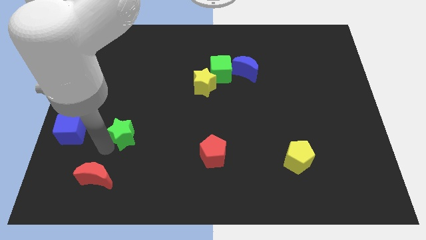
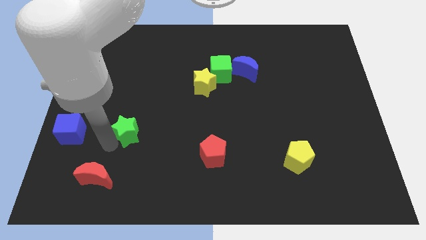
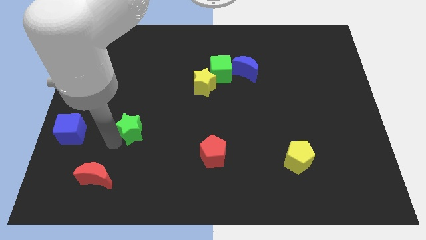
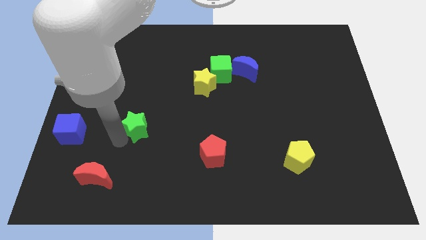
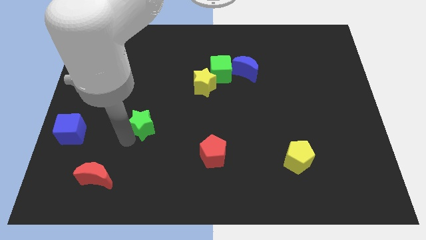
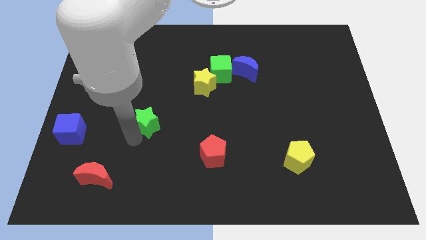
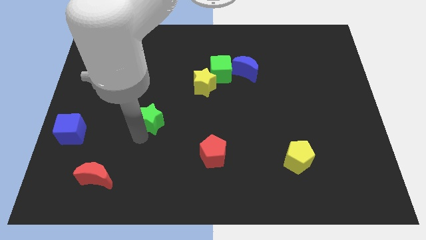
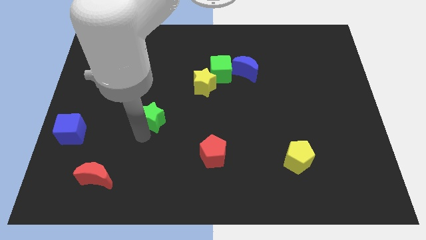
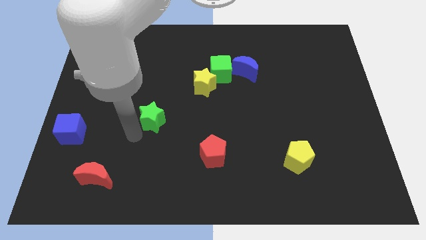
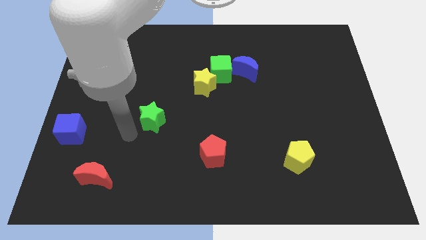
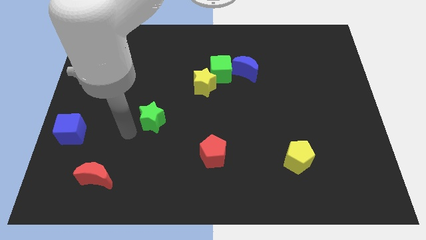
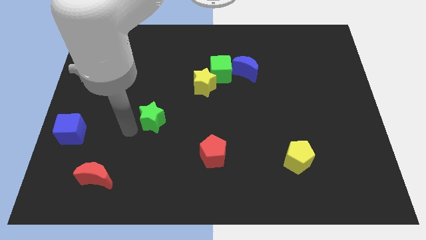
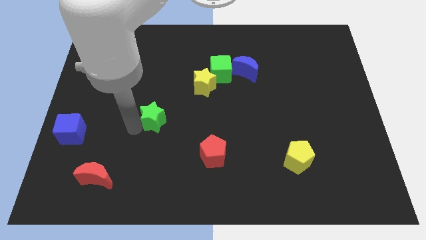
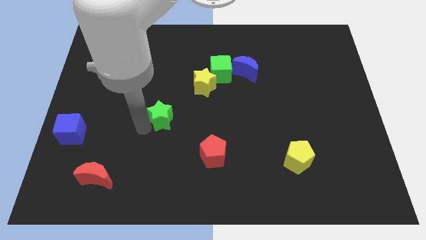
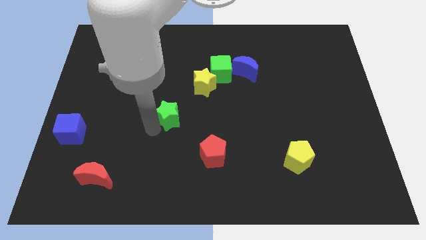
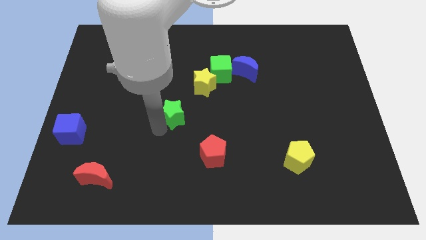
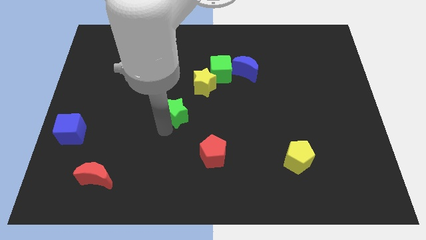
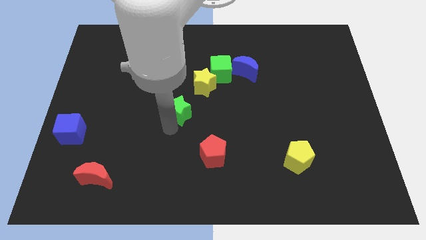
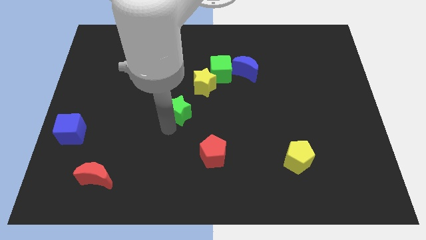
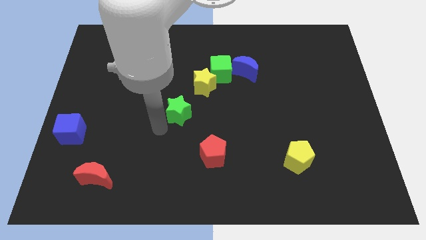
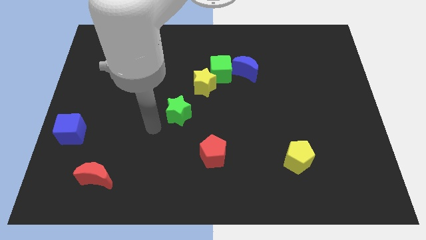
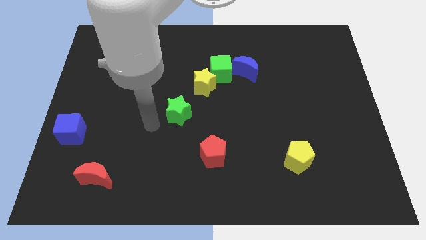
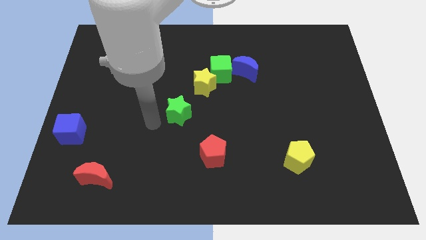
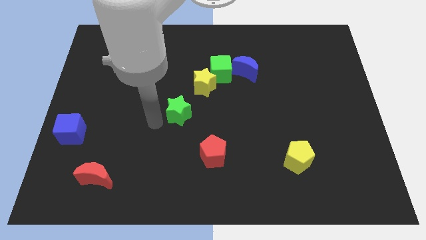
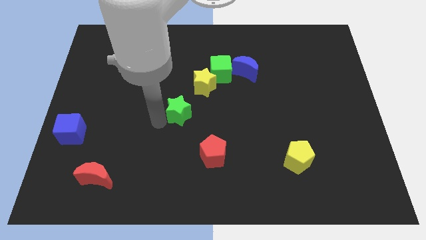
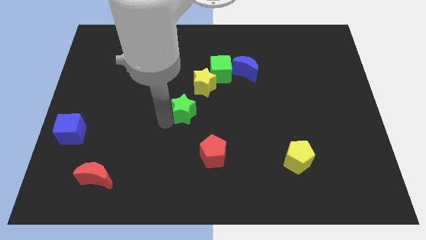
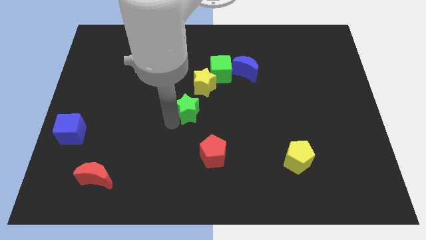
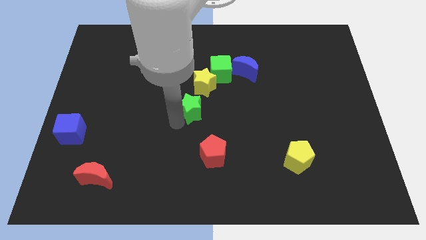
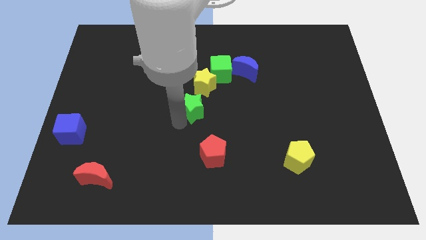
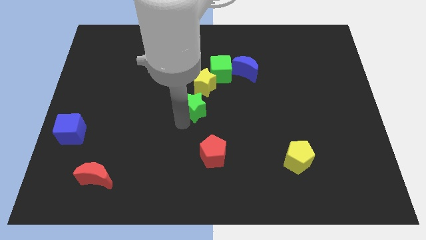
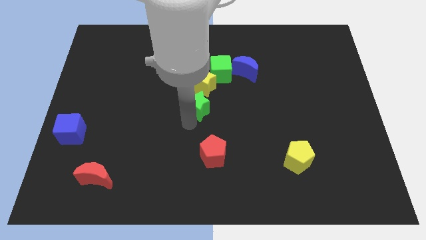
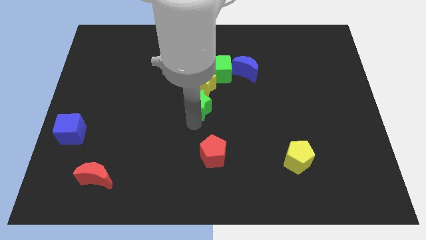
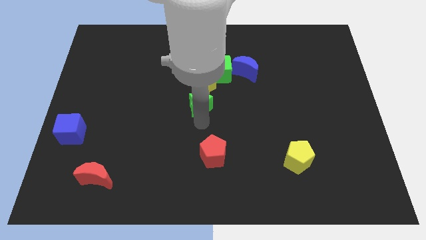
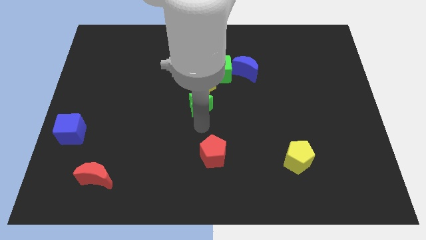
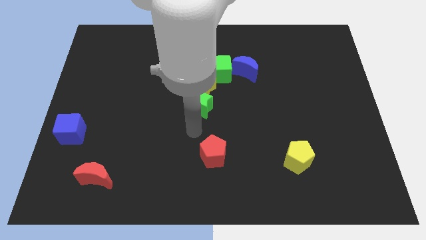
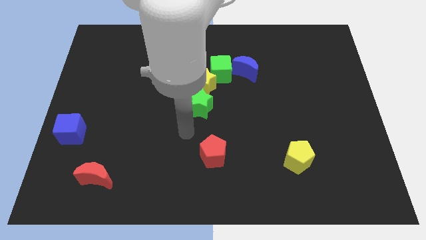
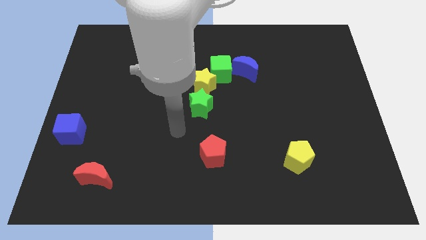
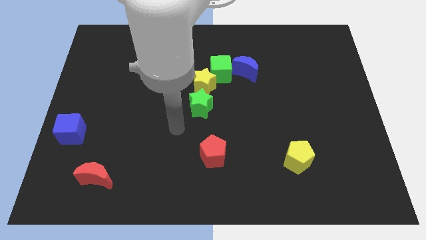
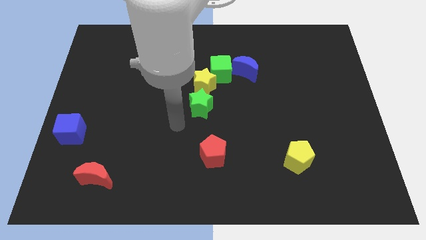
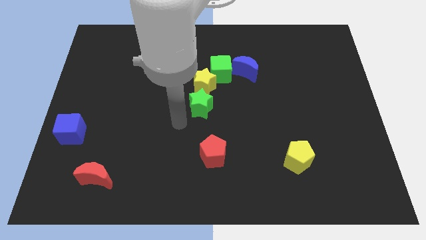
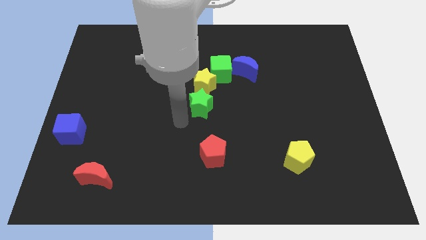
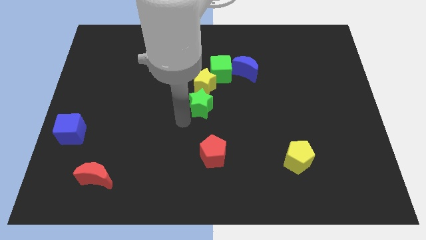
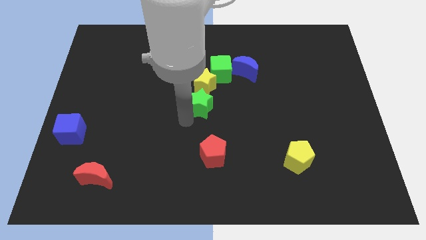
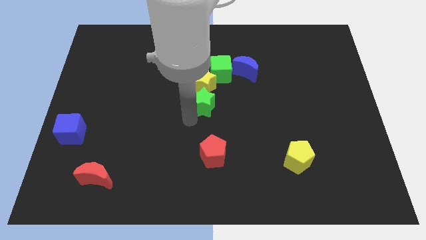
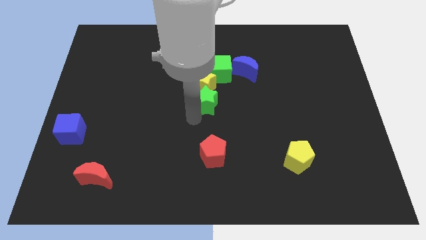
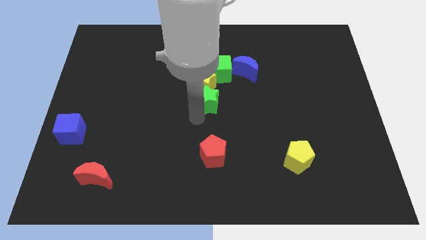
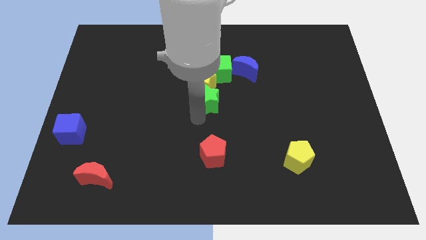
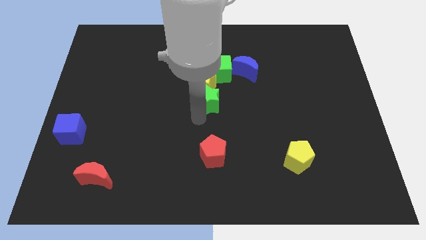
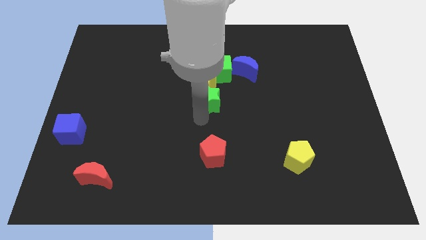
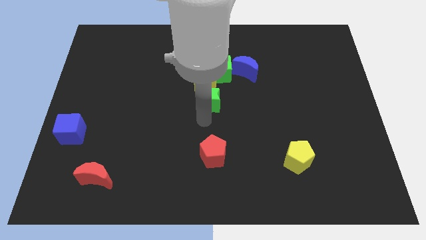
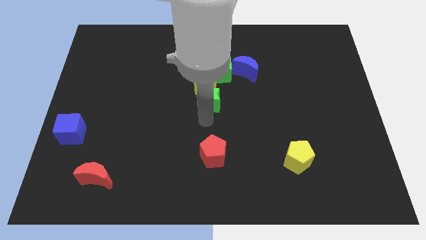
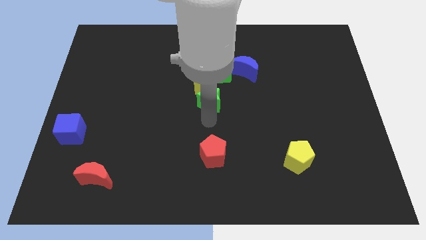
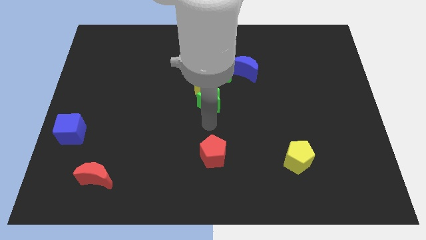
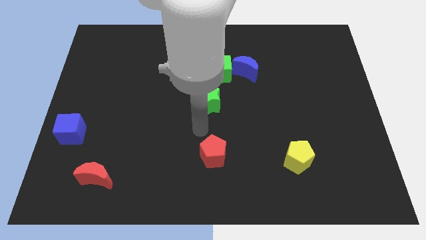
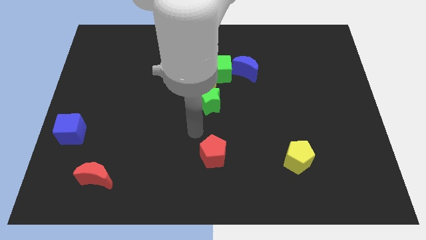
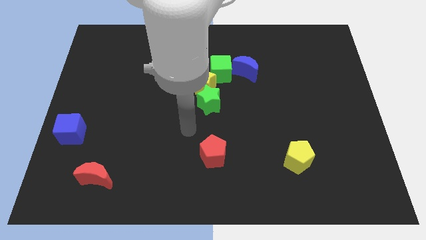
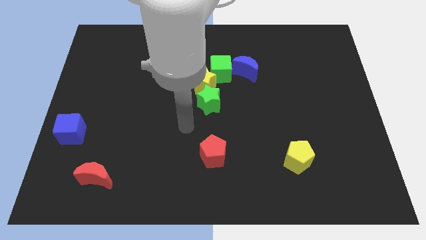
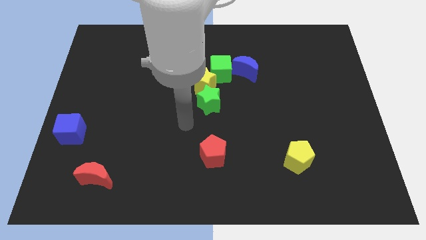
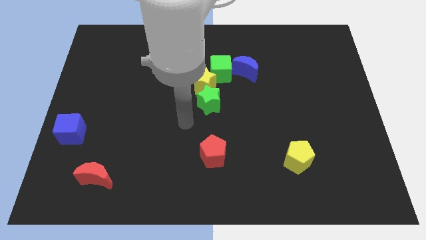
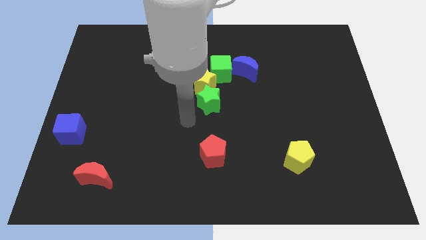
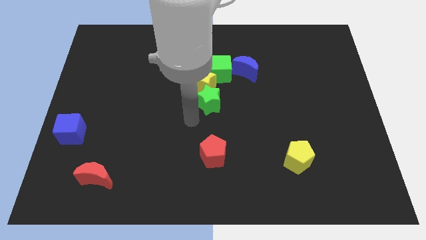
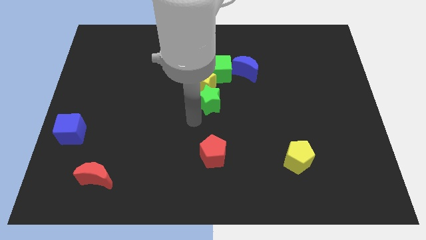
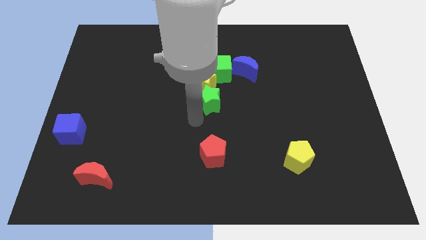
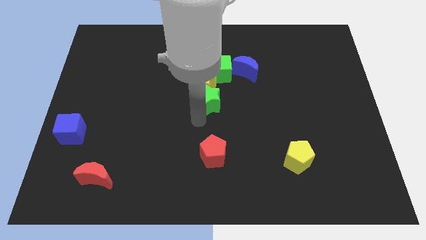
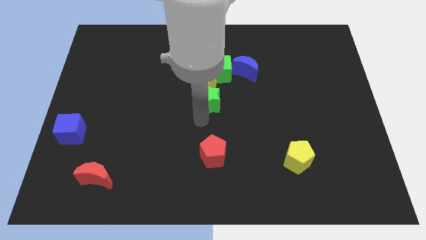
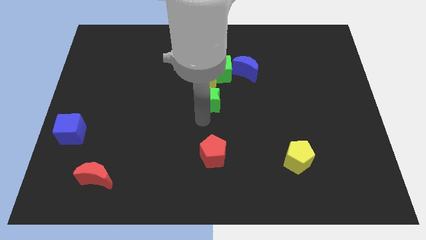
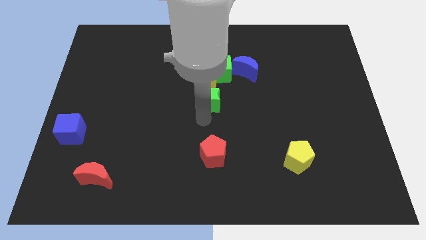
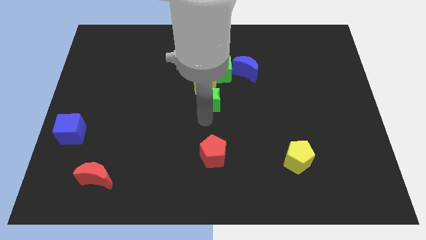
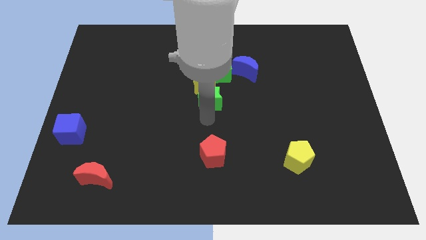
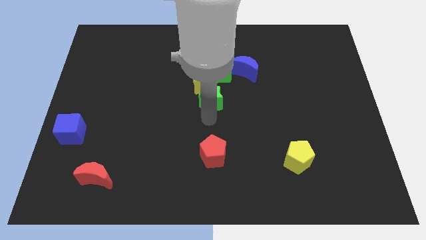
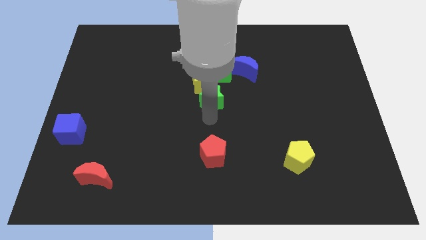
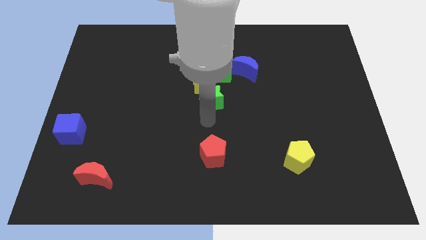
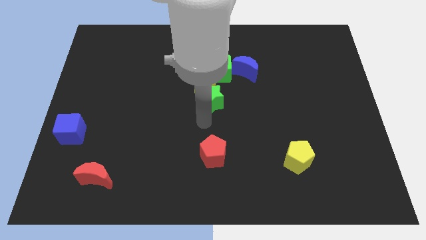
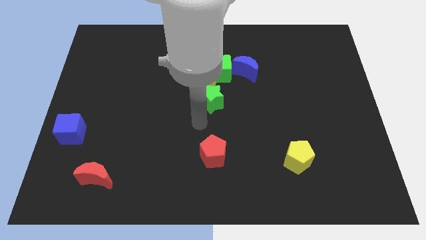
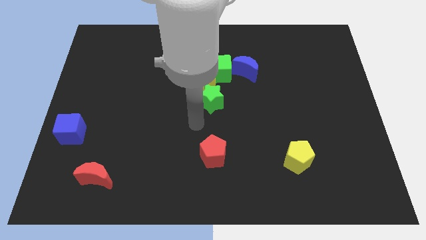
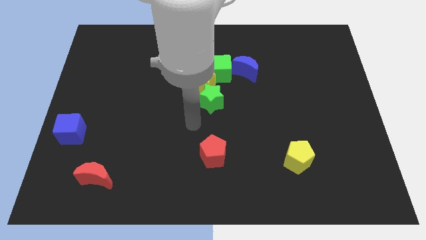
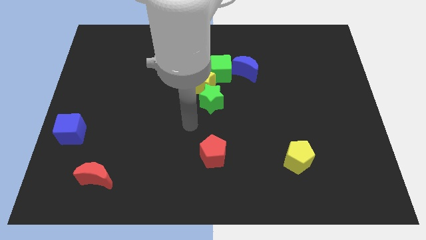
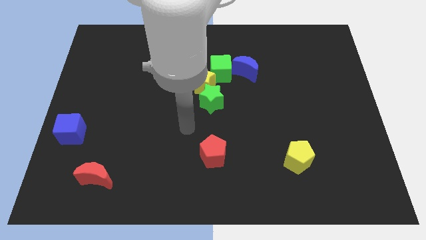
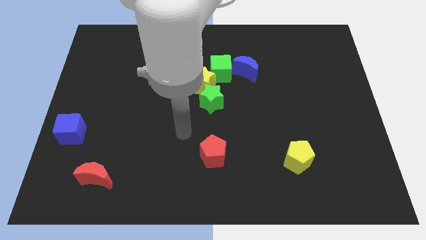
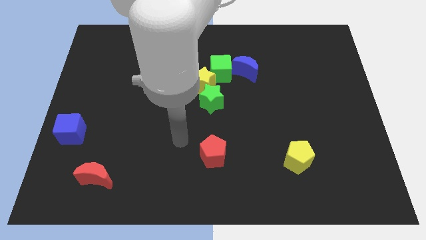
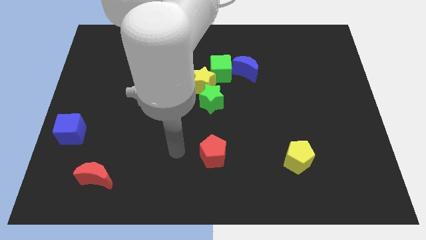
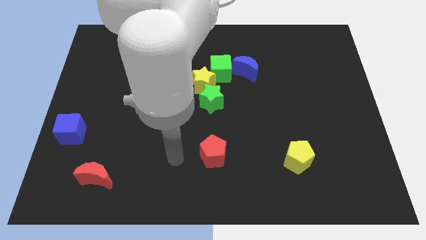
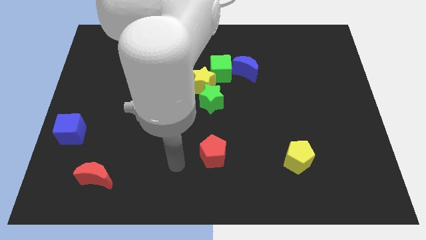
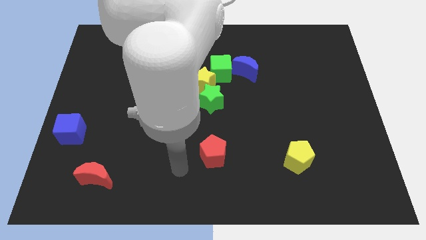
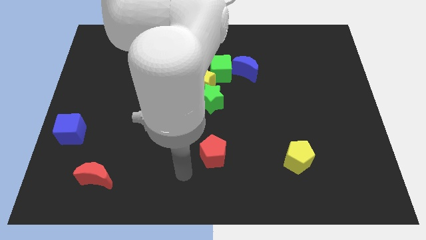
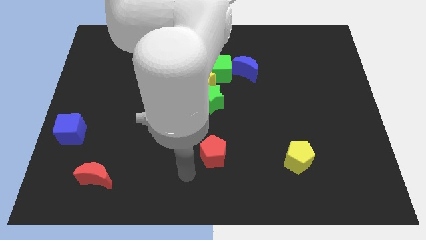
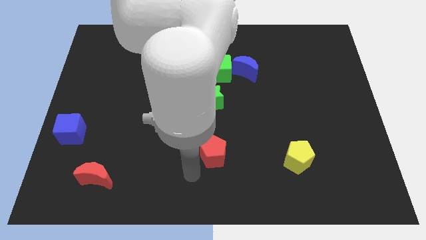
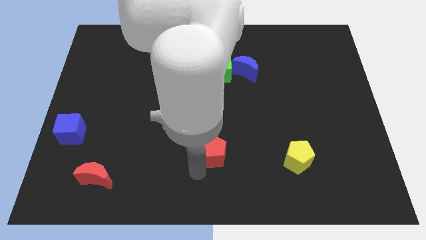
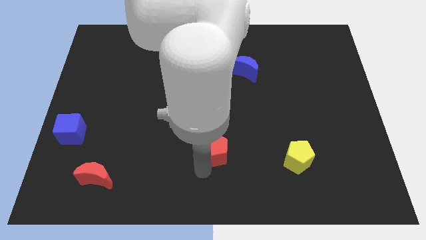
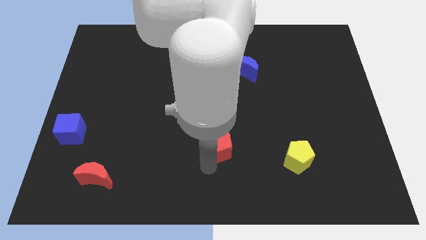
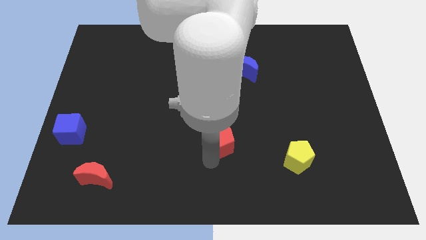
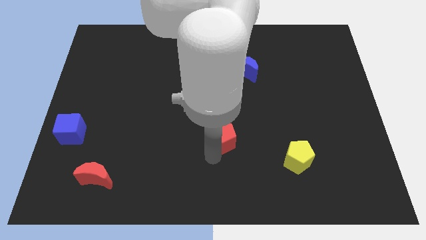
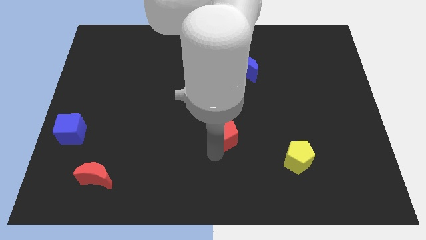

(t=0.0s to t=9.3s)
place the green star into the yellow star
